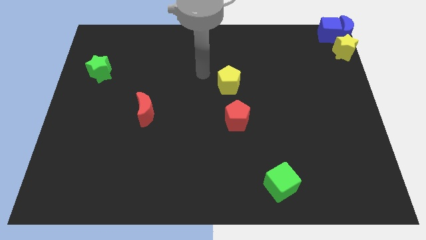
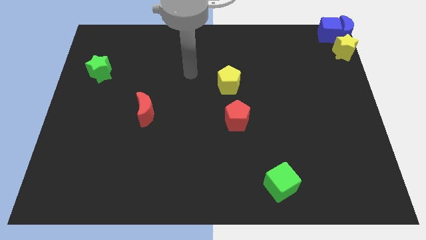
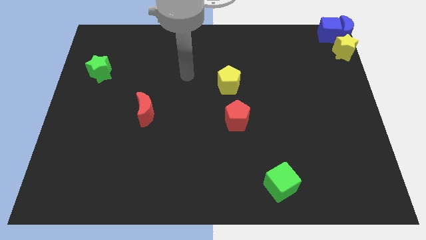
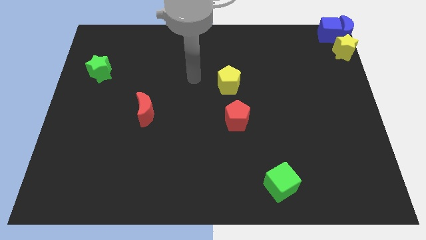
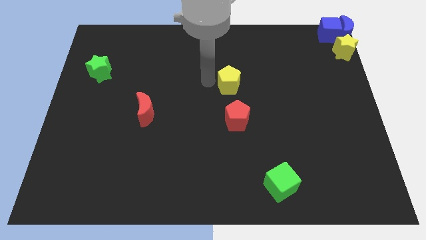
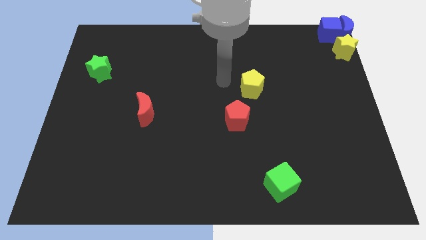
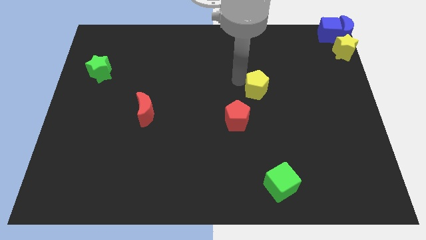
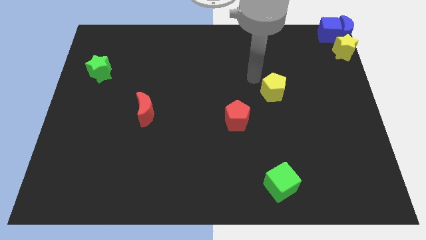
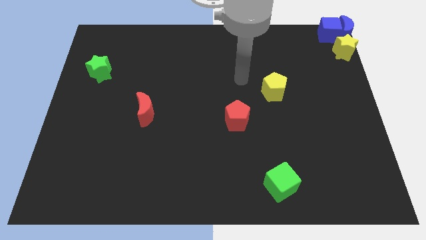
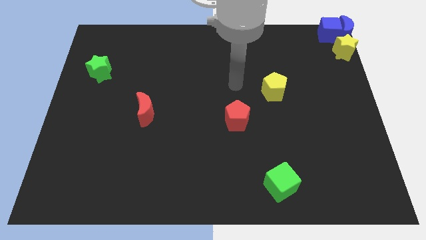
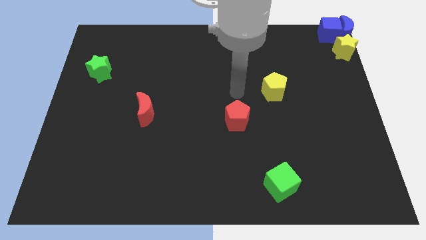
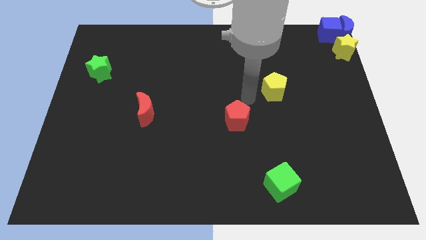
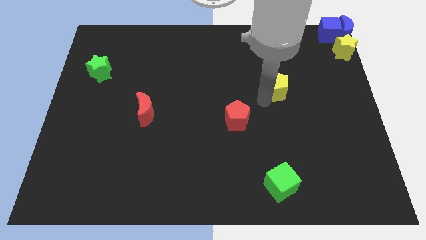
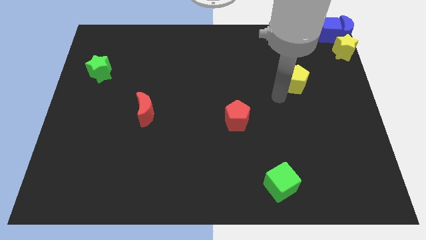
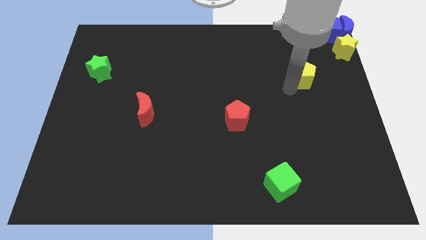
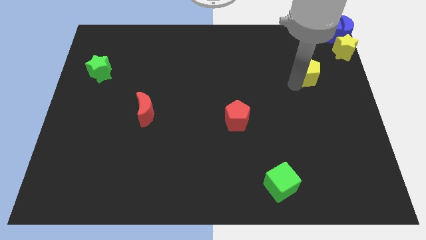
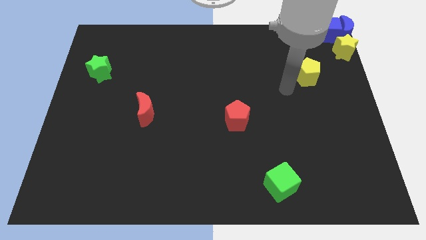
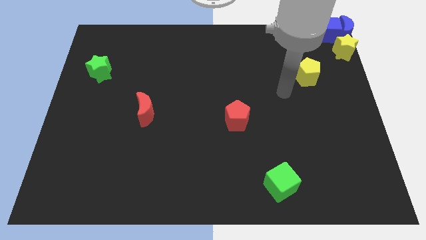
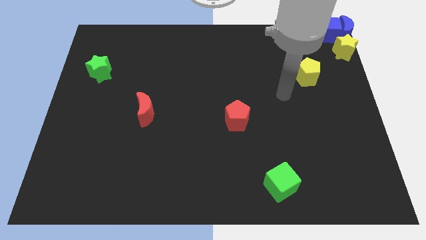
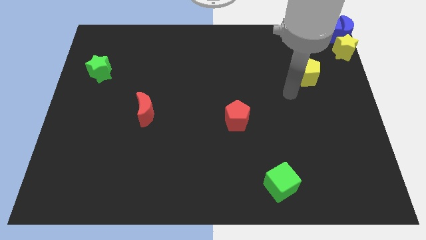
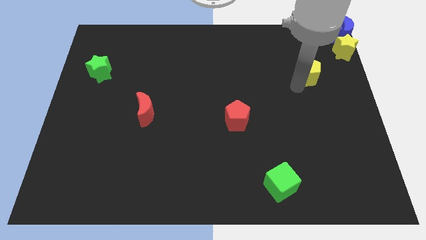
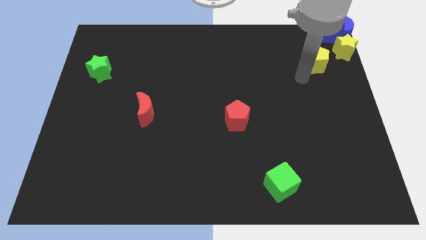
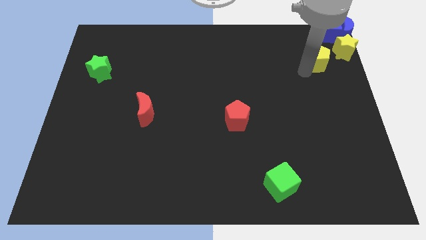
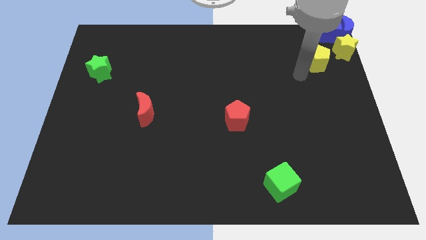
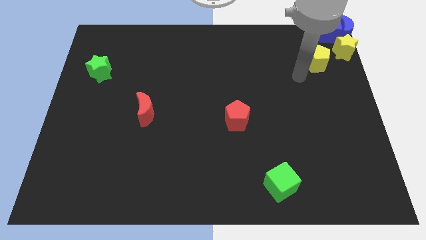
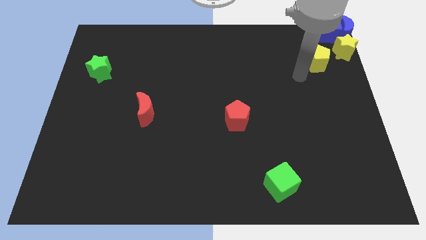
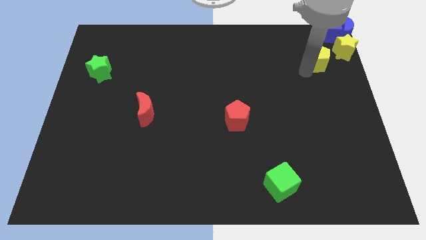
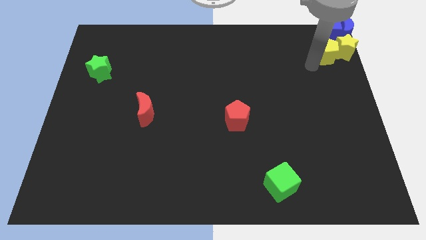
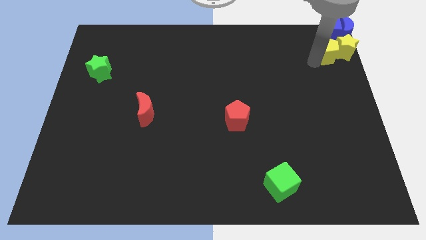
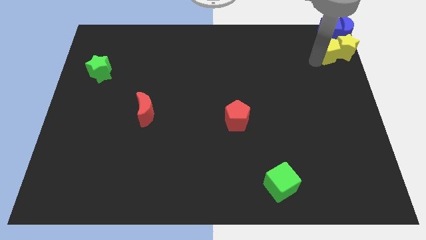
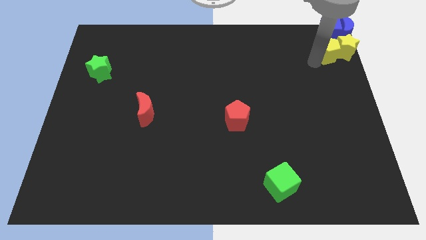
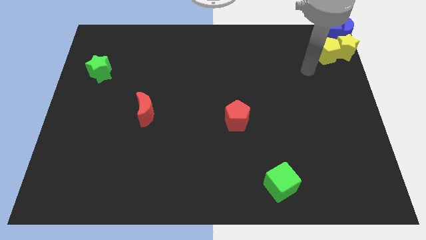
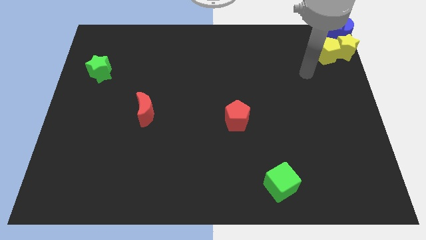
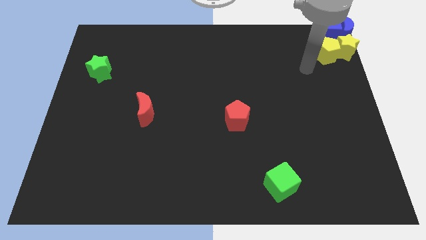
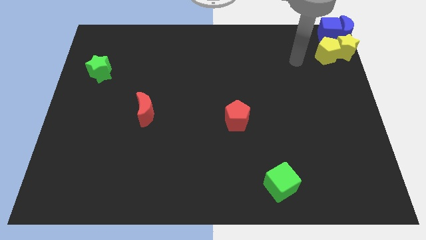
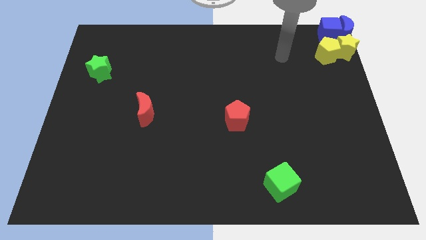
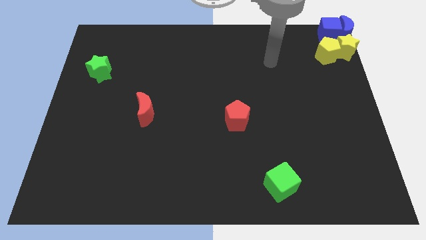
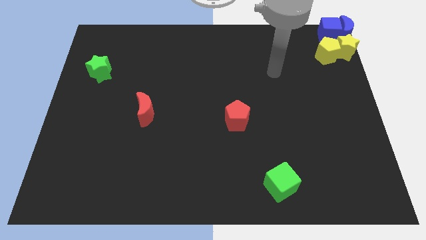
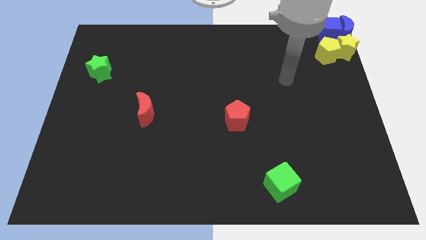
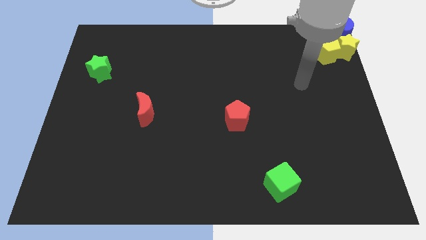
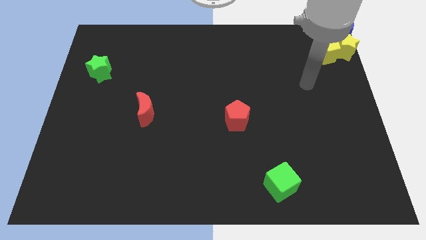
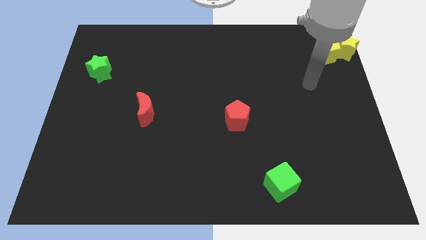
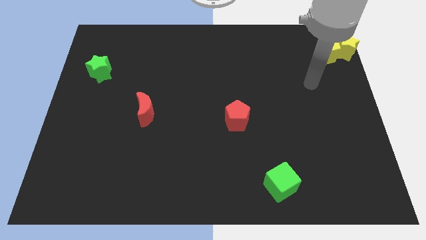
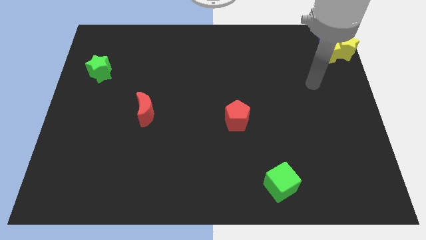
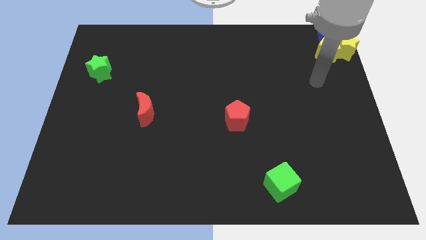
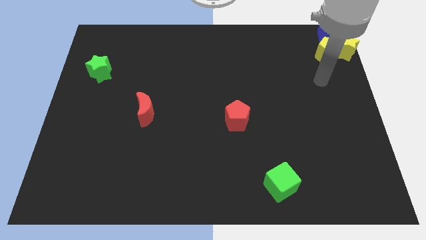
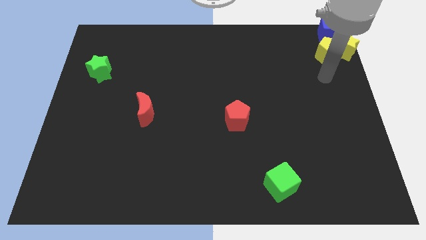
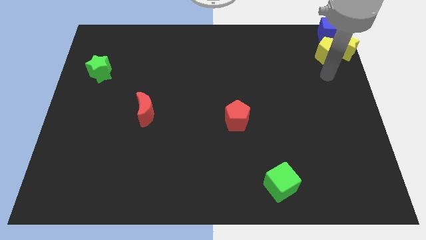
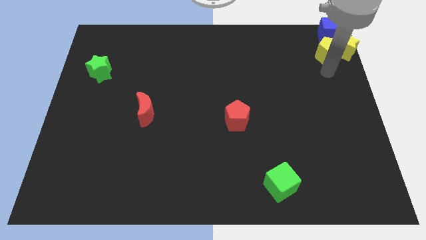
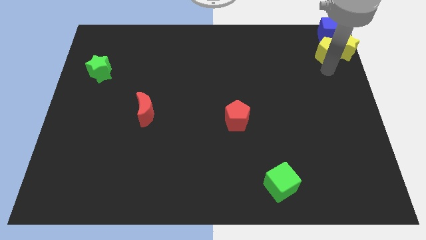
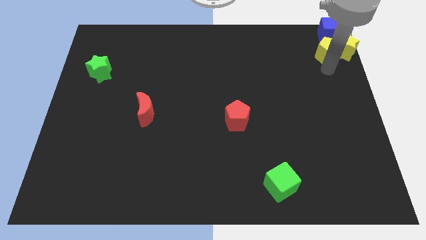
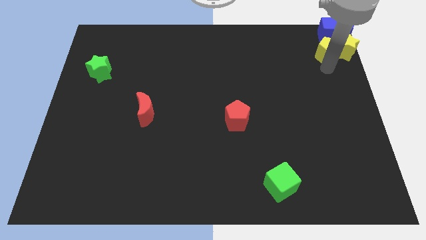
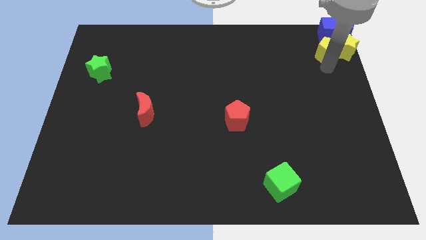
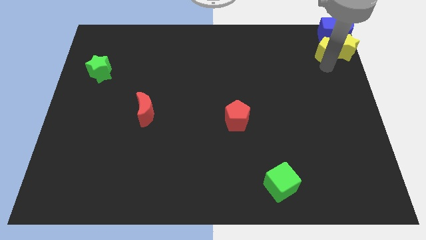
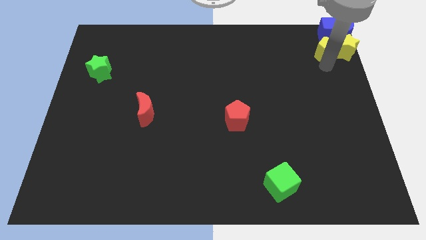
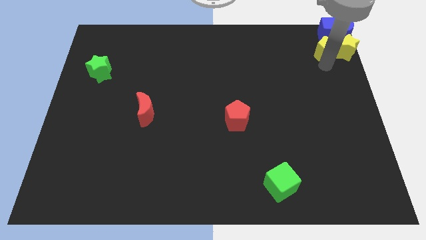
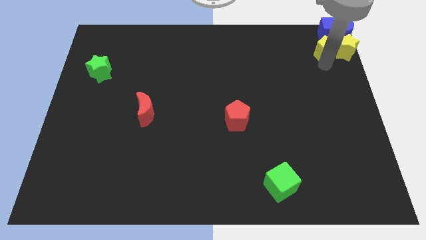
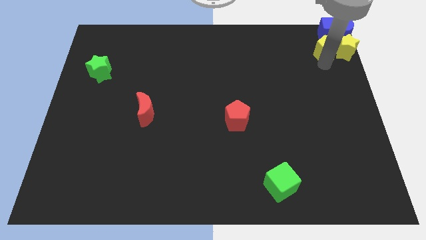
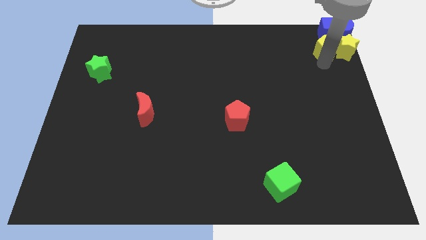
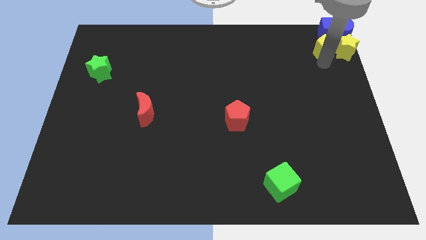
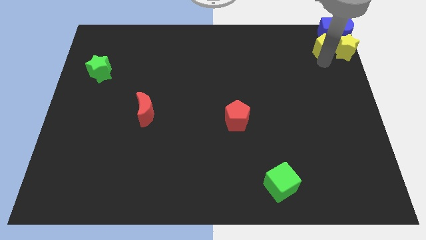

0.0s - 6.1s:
place the yellow pentagon left to the yellow star

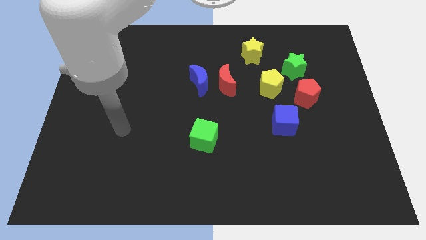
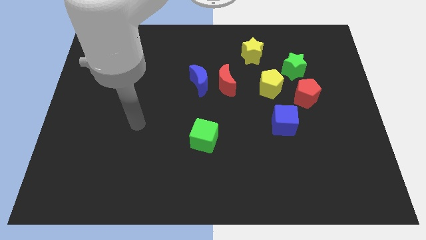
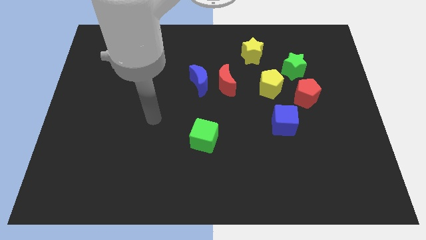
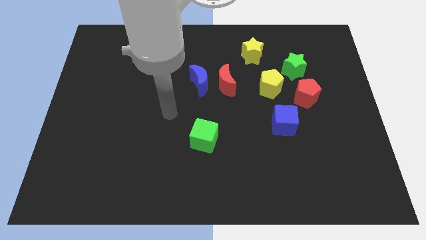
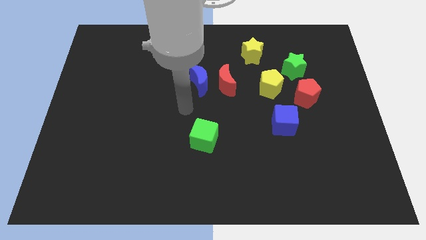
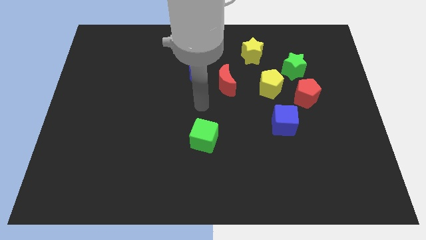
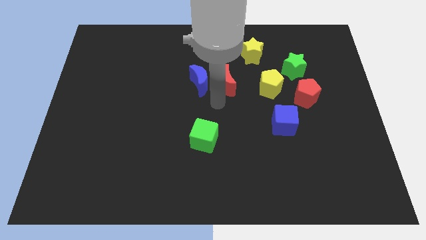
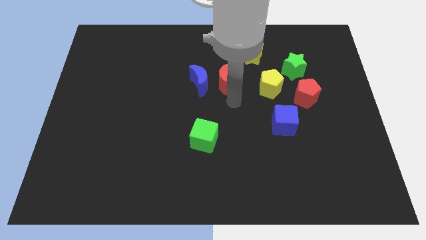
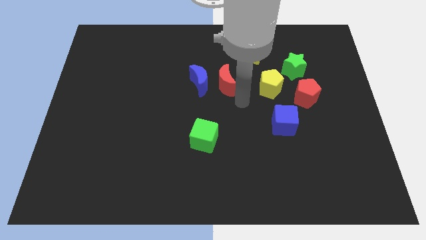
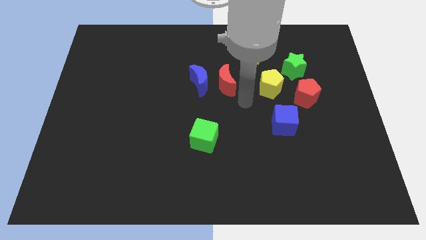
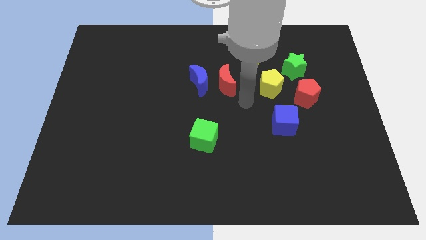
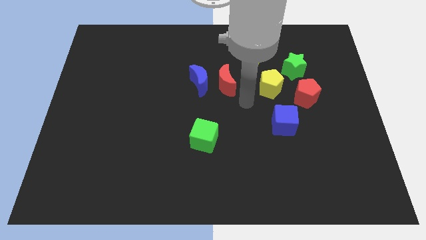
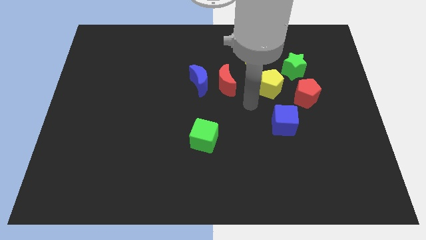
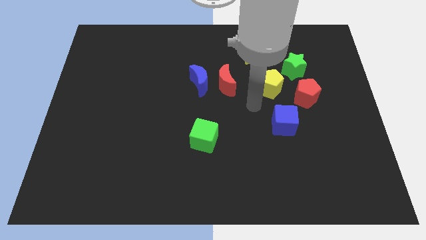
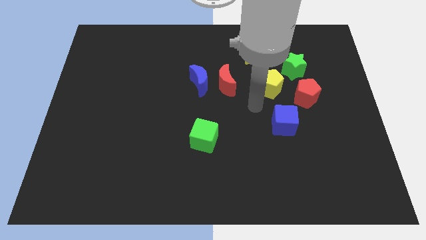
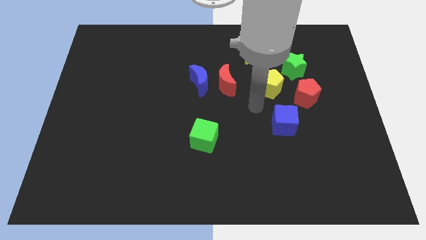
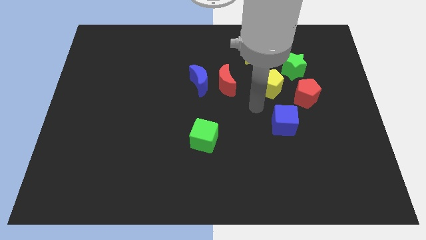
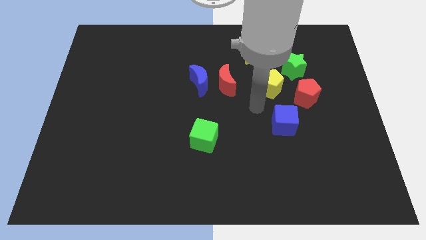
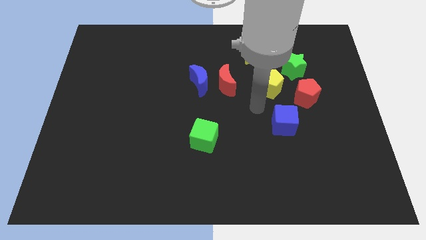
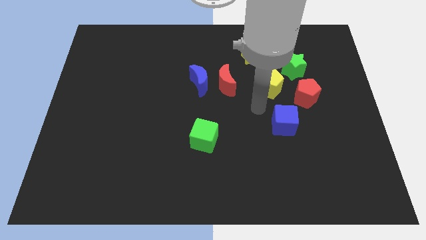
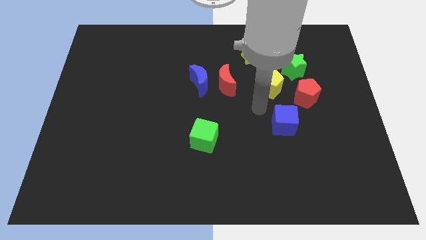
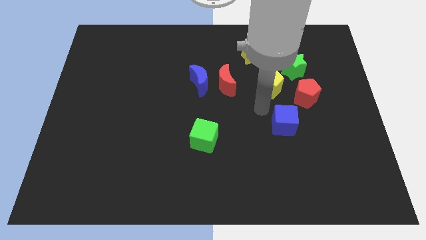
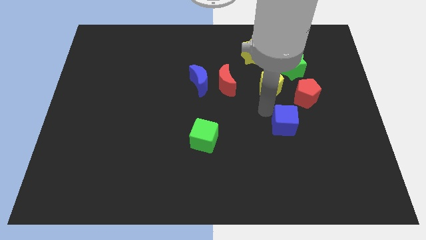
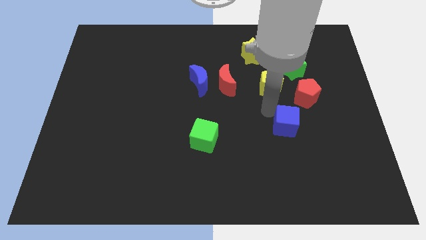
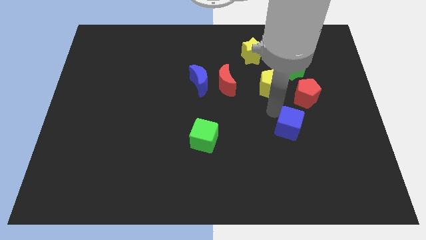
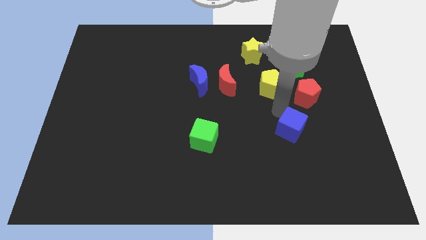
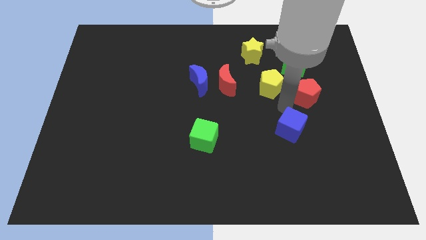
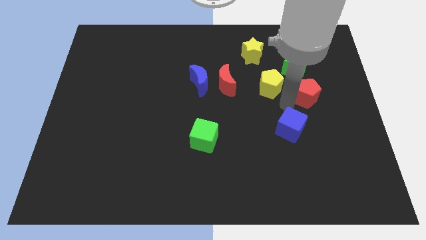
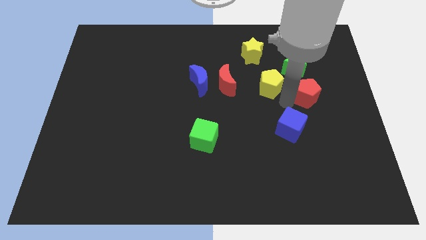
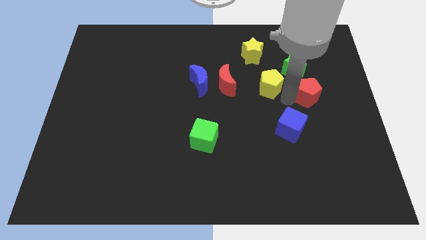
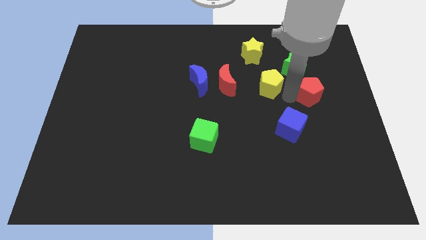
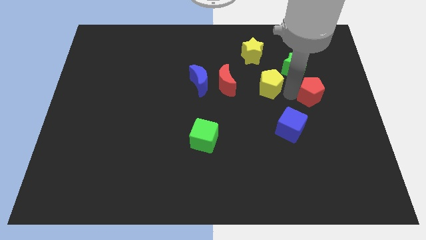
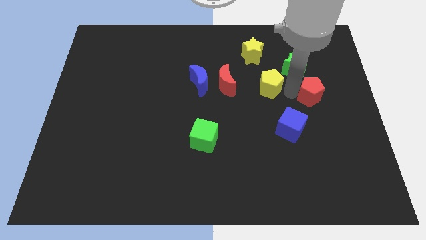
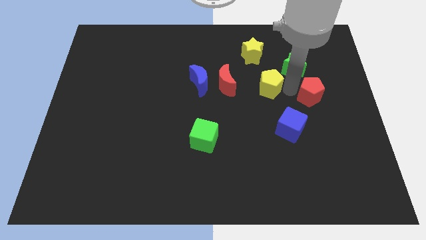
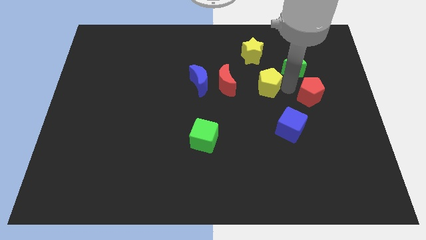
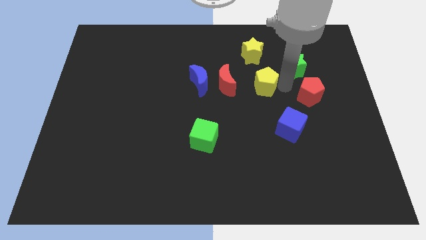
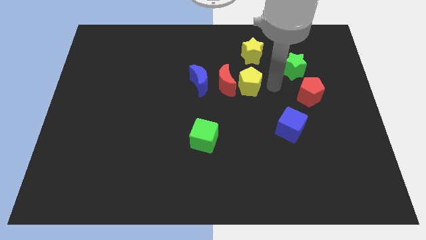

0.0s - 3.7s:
slightly touch the blue cube
